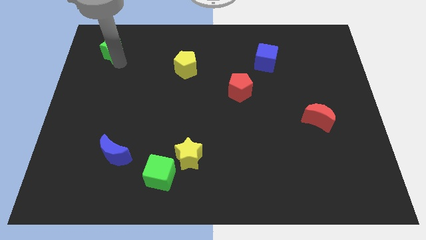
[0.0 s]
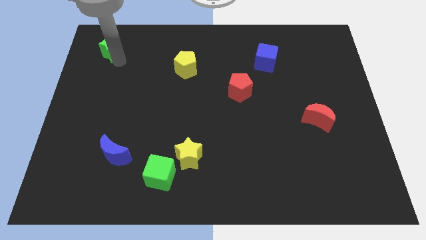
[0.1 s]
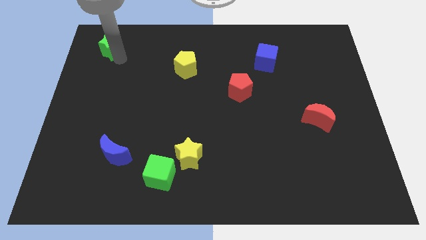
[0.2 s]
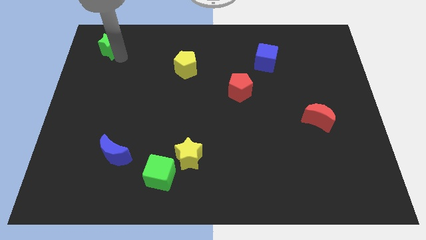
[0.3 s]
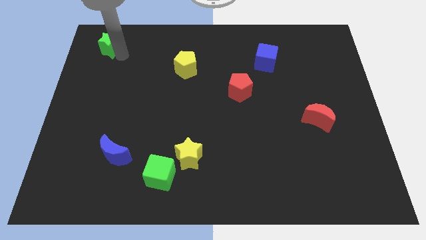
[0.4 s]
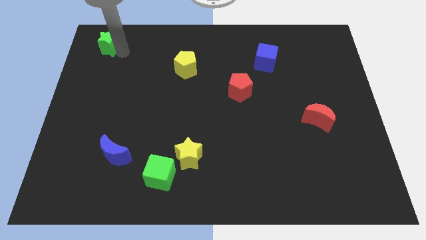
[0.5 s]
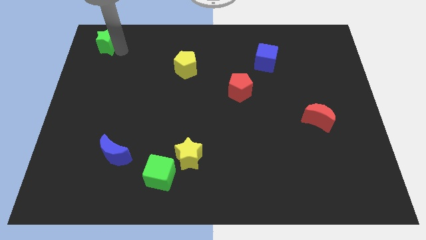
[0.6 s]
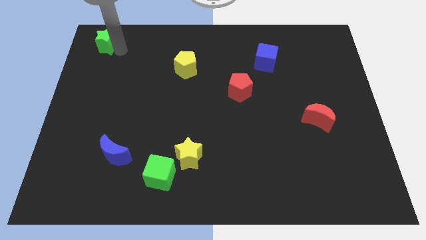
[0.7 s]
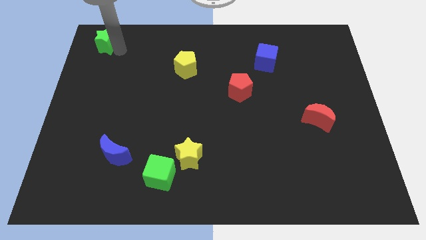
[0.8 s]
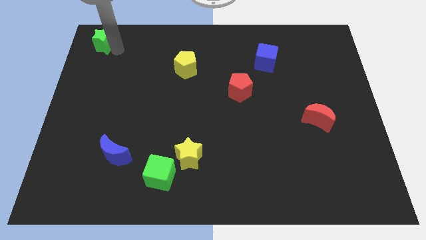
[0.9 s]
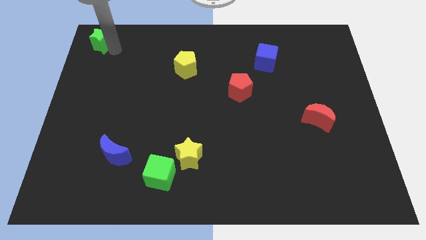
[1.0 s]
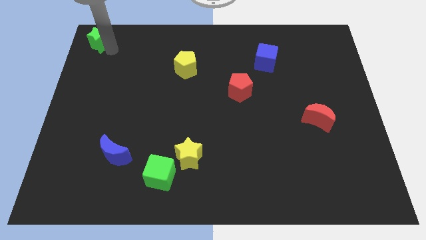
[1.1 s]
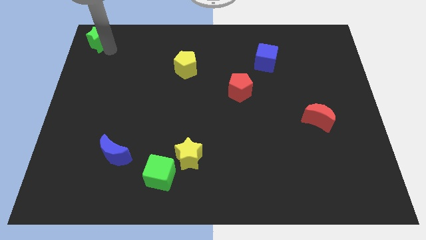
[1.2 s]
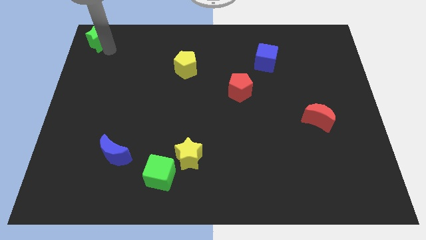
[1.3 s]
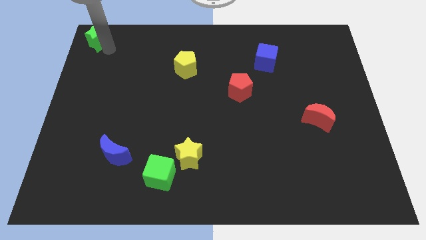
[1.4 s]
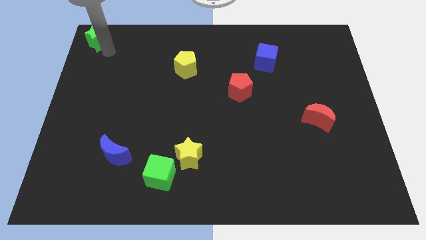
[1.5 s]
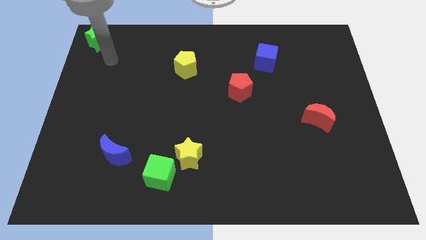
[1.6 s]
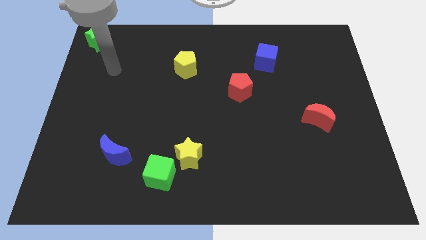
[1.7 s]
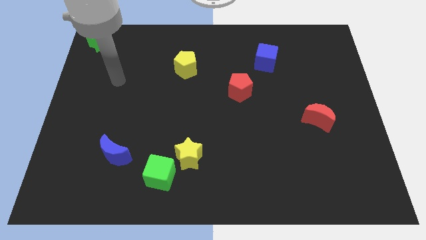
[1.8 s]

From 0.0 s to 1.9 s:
place the green star towards the top left corner of the board

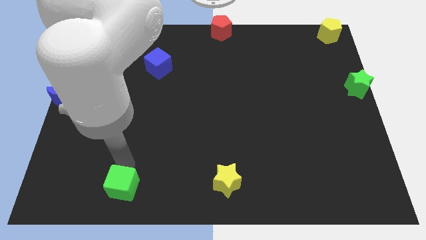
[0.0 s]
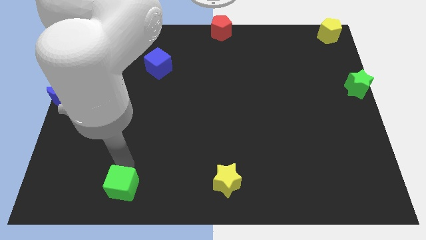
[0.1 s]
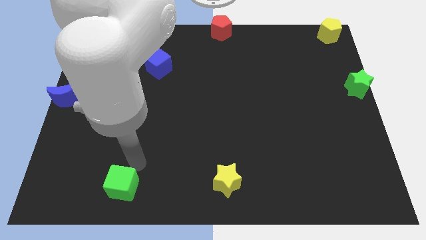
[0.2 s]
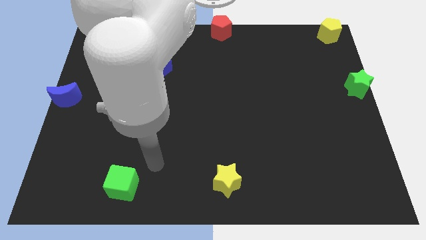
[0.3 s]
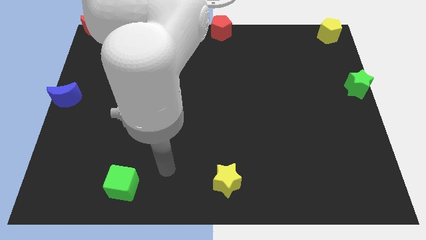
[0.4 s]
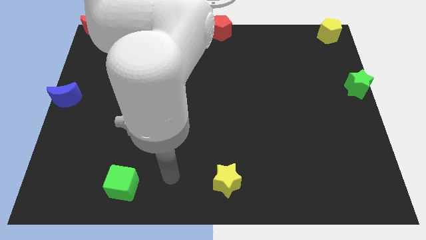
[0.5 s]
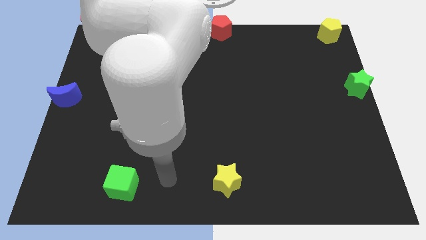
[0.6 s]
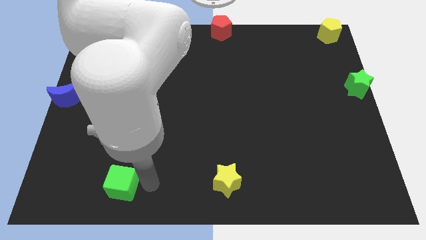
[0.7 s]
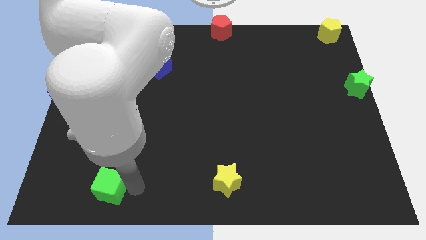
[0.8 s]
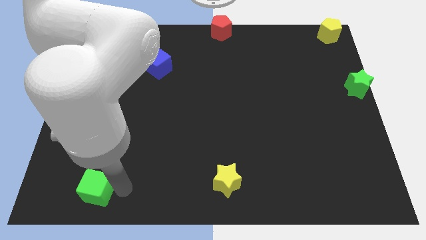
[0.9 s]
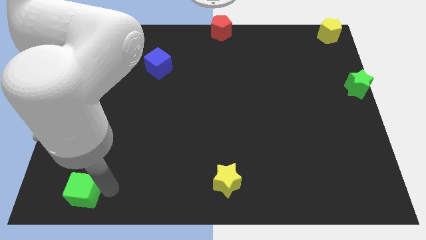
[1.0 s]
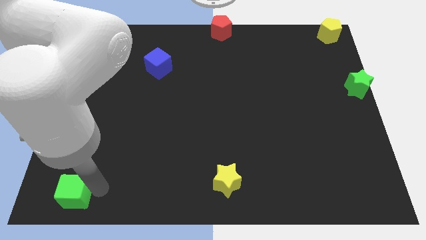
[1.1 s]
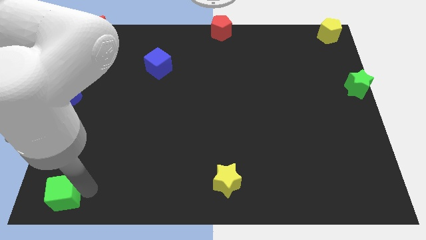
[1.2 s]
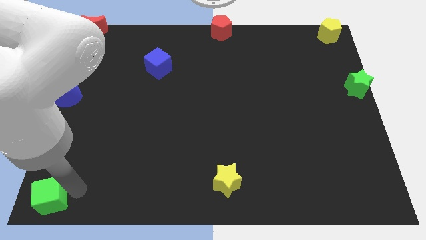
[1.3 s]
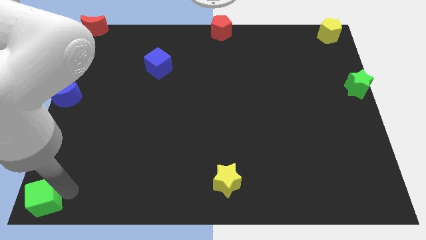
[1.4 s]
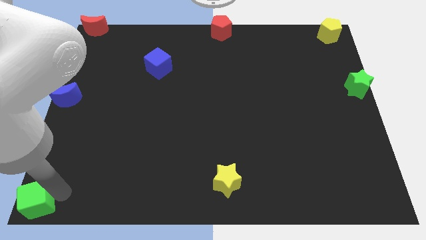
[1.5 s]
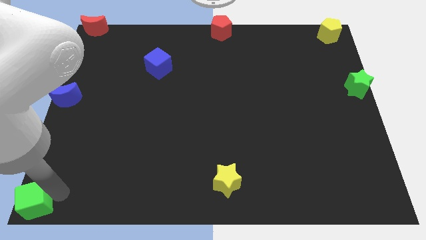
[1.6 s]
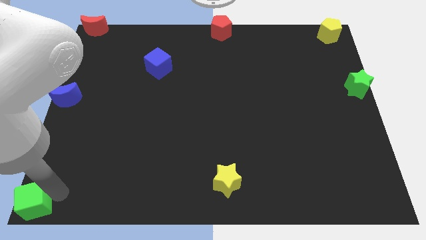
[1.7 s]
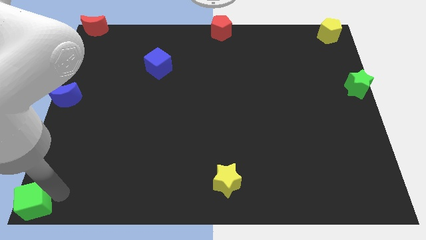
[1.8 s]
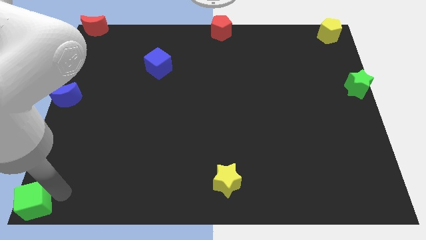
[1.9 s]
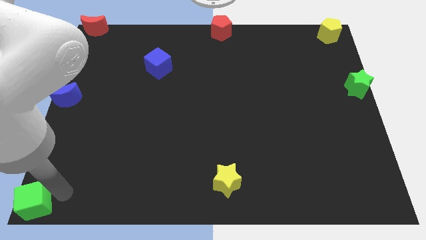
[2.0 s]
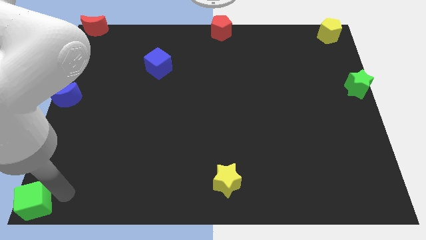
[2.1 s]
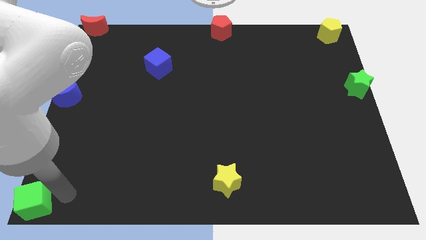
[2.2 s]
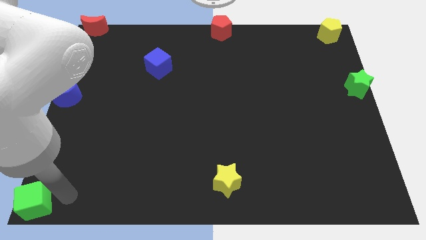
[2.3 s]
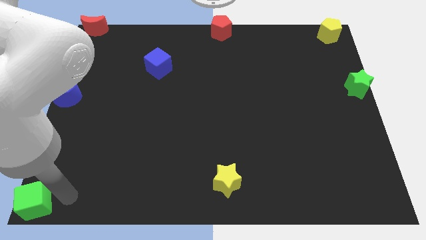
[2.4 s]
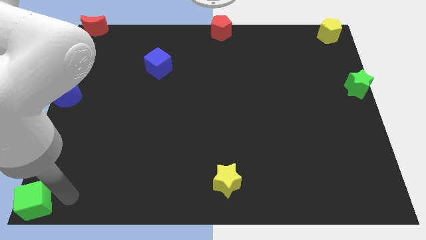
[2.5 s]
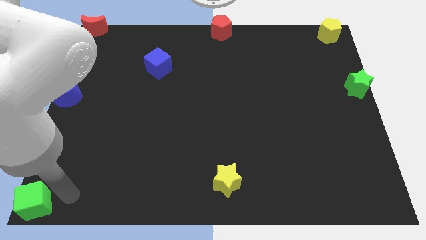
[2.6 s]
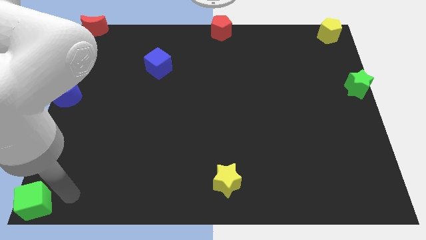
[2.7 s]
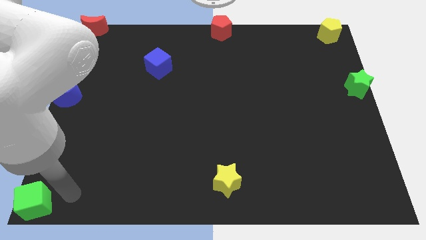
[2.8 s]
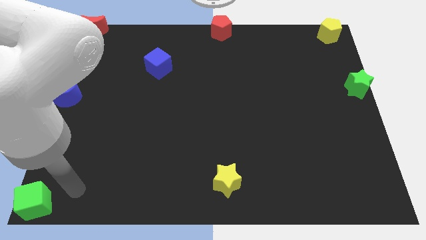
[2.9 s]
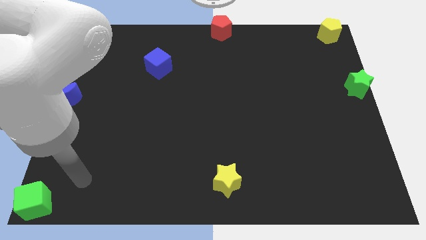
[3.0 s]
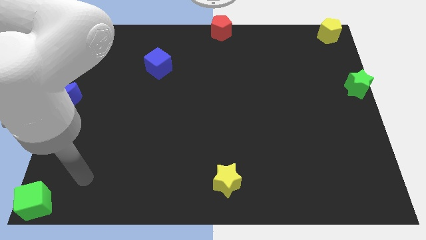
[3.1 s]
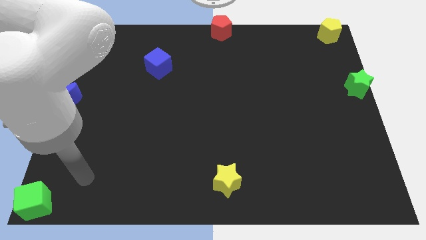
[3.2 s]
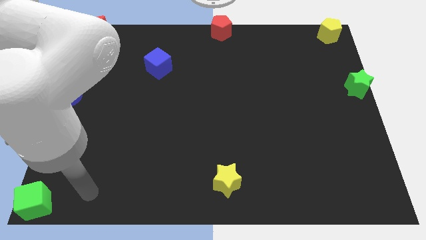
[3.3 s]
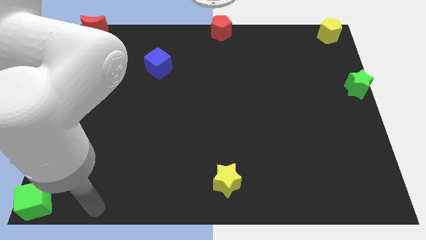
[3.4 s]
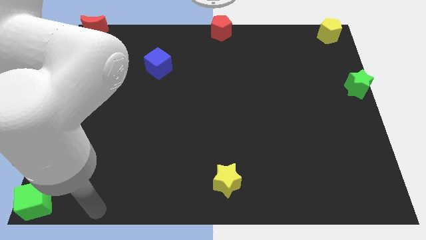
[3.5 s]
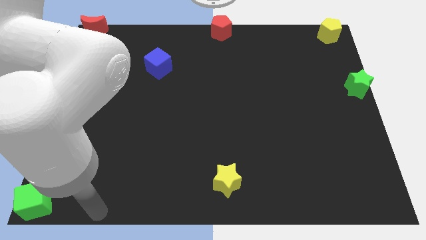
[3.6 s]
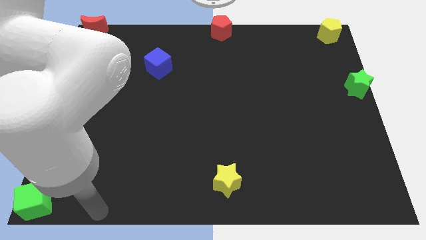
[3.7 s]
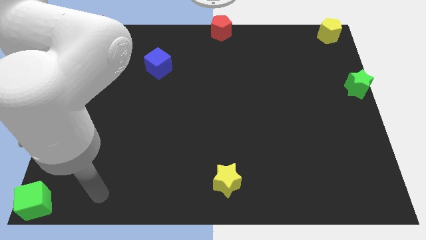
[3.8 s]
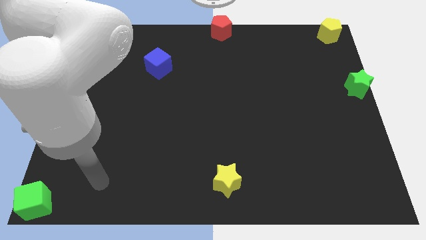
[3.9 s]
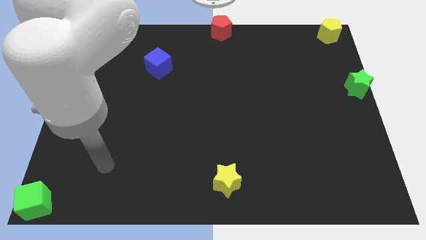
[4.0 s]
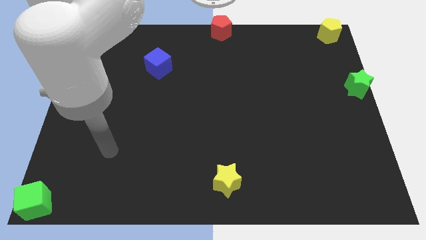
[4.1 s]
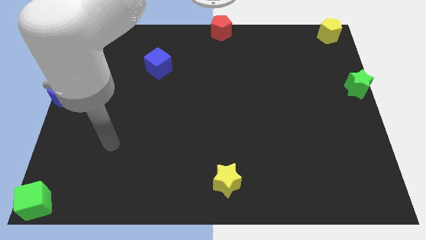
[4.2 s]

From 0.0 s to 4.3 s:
place green cube to the bottom left corner of the board

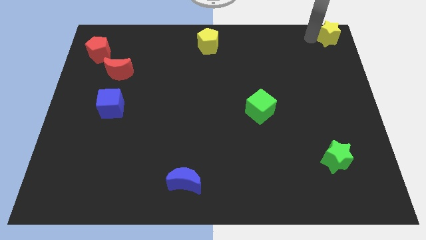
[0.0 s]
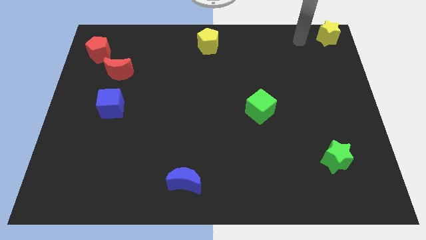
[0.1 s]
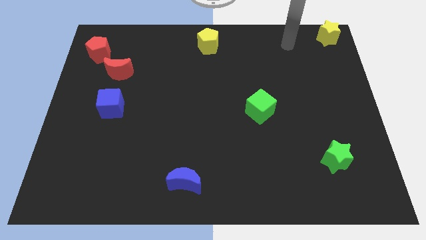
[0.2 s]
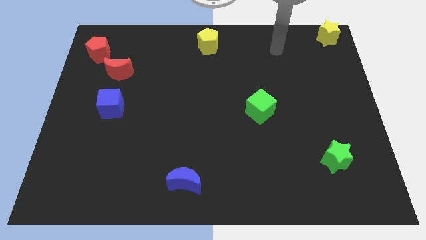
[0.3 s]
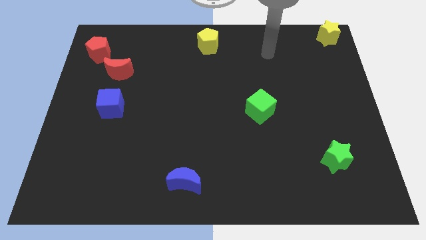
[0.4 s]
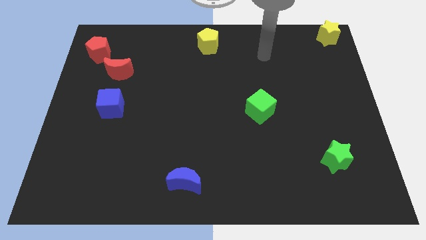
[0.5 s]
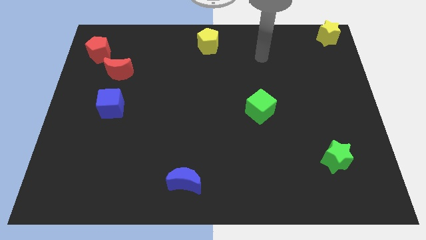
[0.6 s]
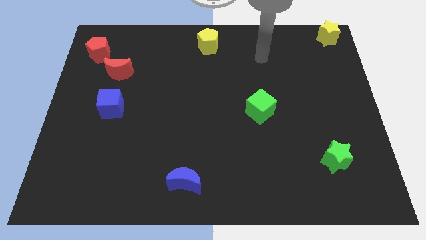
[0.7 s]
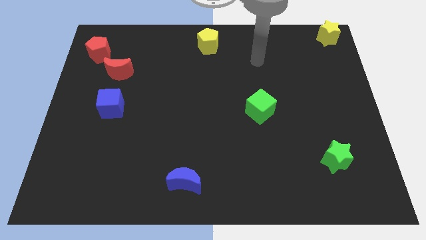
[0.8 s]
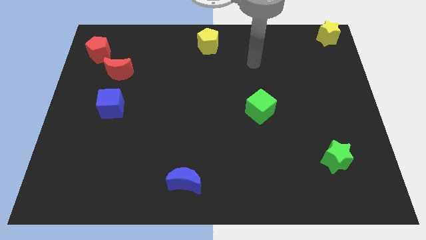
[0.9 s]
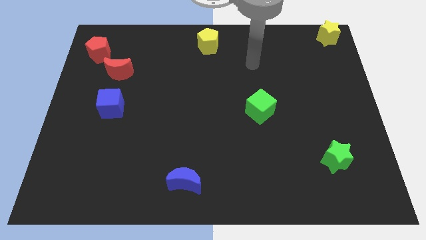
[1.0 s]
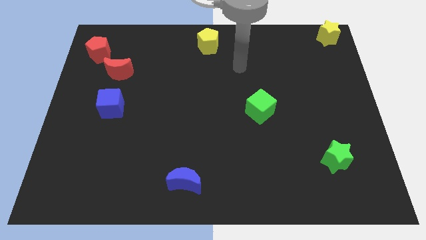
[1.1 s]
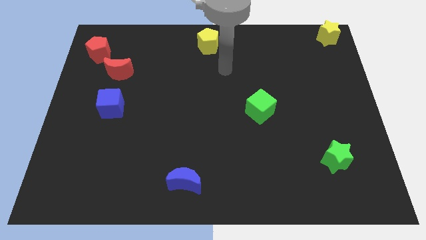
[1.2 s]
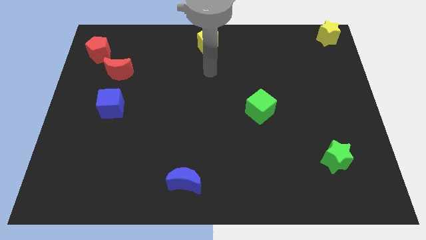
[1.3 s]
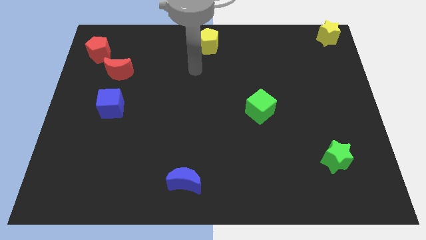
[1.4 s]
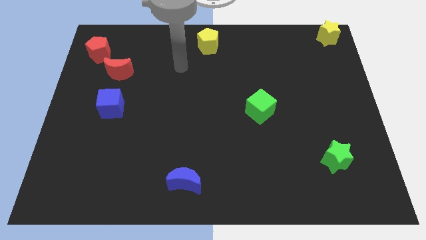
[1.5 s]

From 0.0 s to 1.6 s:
move your arm away from yellow pentagon

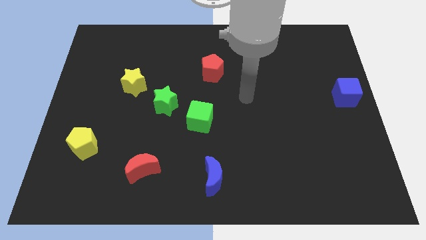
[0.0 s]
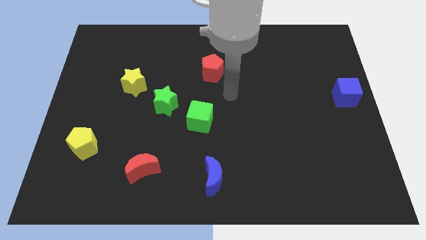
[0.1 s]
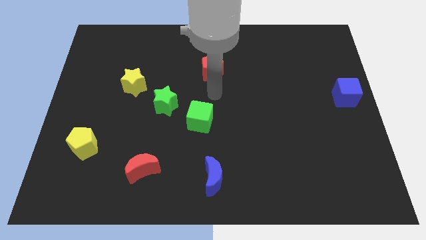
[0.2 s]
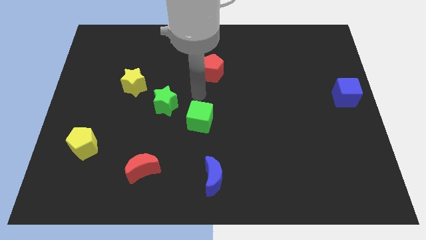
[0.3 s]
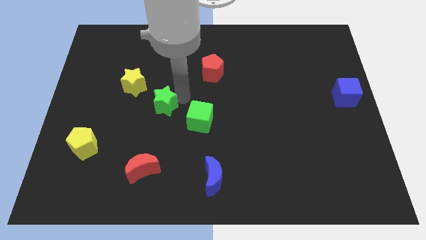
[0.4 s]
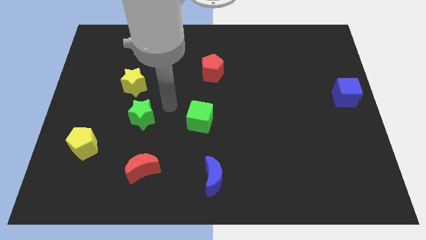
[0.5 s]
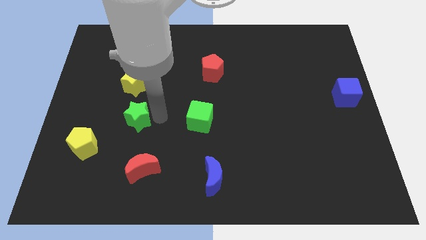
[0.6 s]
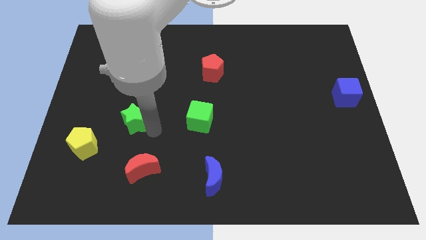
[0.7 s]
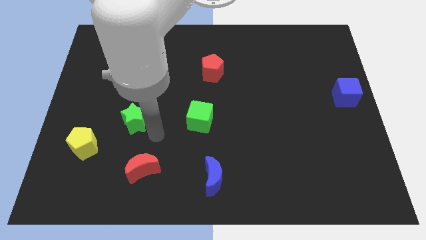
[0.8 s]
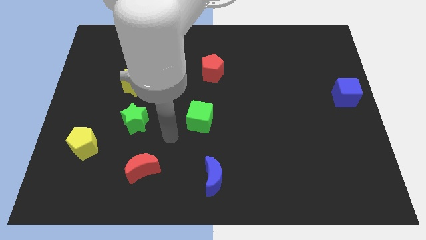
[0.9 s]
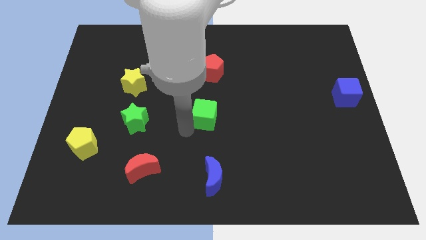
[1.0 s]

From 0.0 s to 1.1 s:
place the green star below the yellow star

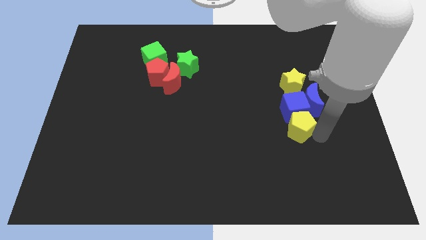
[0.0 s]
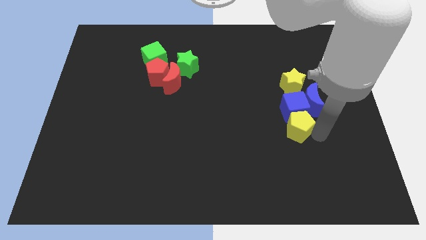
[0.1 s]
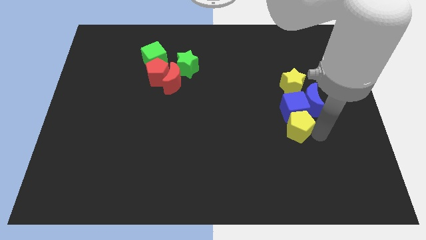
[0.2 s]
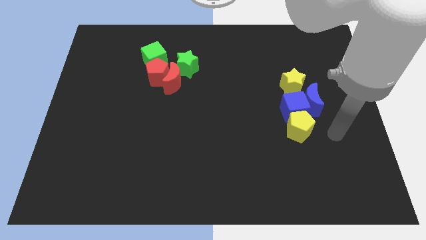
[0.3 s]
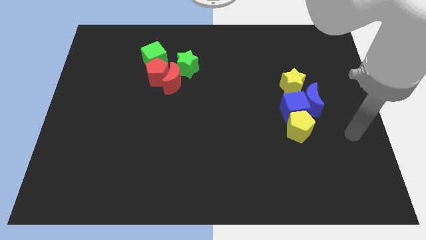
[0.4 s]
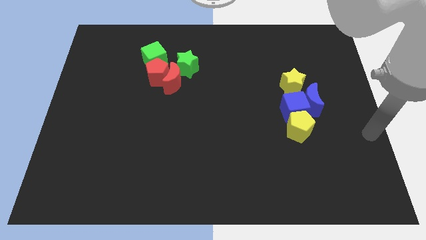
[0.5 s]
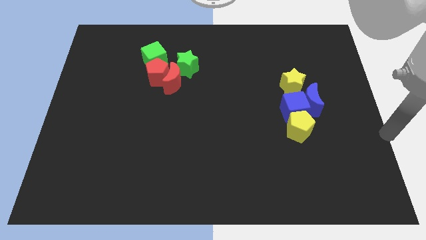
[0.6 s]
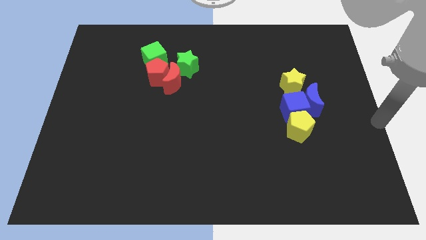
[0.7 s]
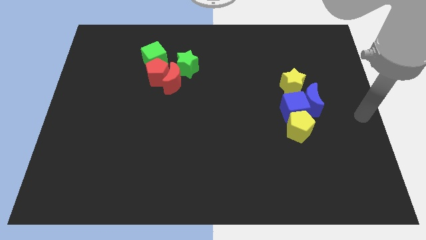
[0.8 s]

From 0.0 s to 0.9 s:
place the arm on the middle right of the board
